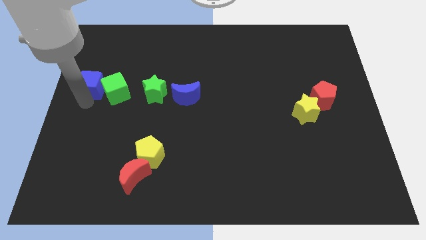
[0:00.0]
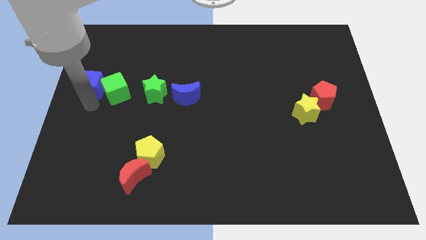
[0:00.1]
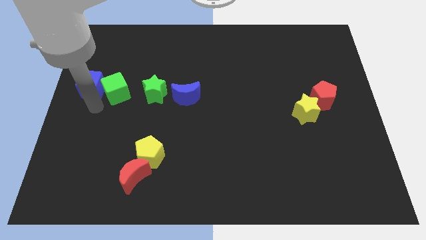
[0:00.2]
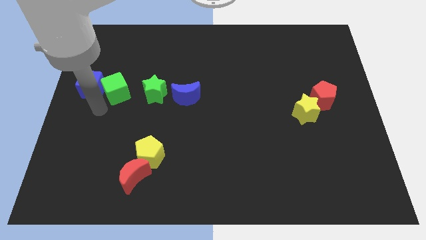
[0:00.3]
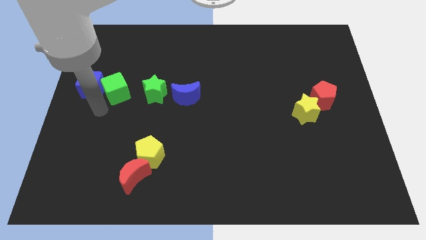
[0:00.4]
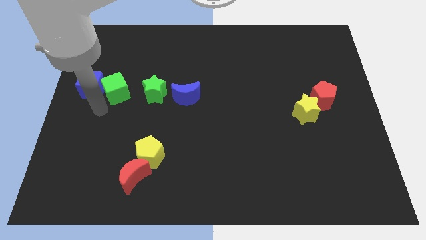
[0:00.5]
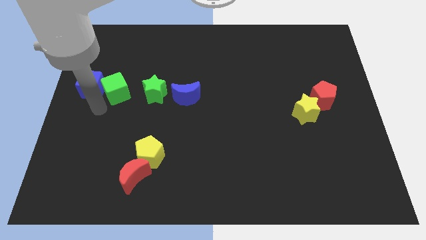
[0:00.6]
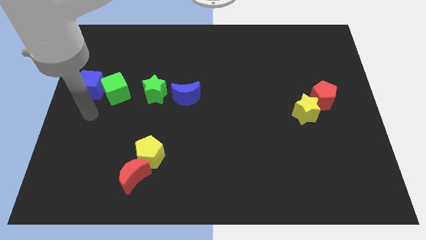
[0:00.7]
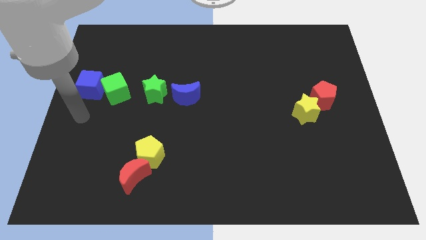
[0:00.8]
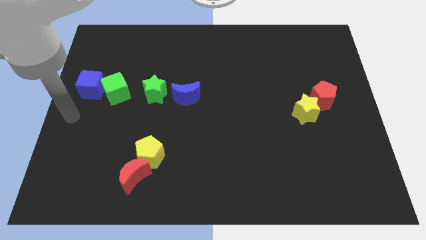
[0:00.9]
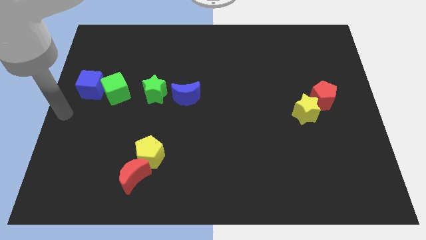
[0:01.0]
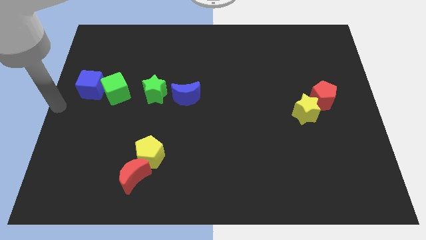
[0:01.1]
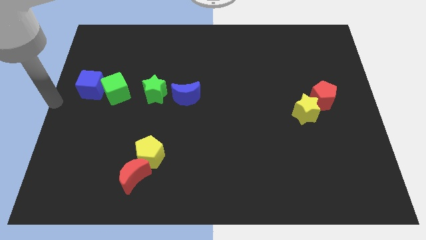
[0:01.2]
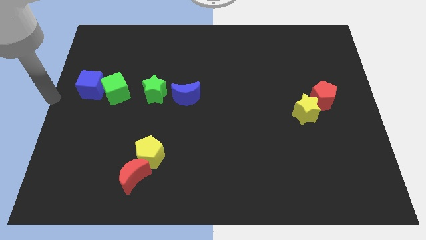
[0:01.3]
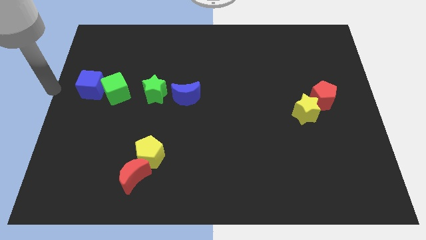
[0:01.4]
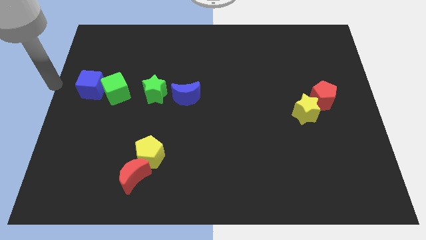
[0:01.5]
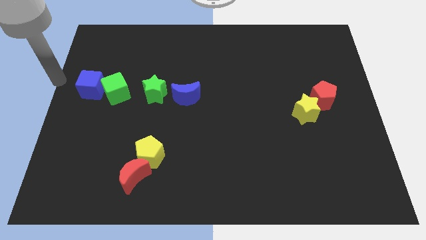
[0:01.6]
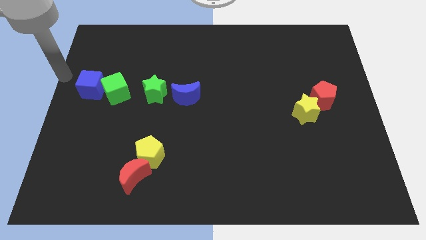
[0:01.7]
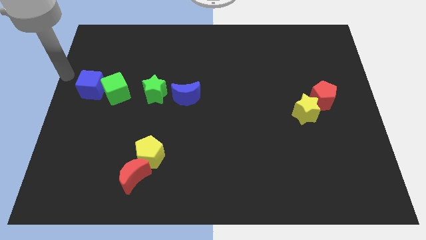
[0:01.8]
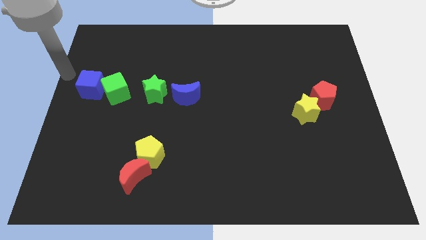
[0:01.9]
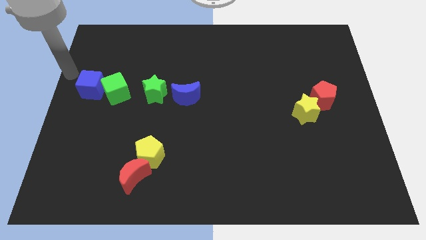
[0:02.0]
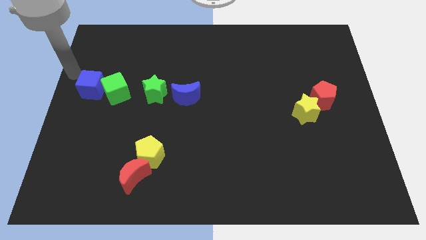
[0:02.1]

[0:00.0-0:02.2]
place the arm diagonal to the blue cube

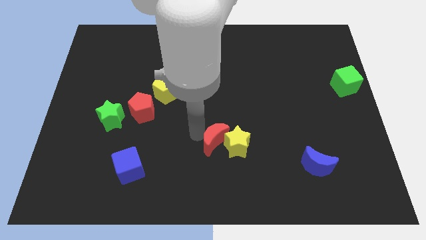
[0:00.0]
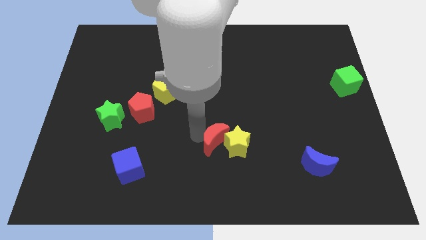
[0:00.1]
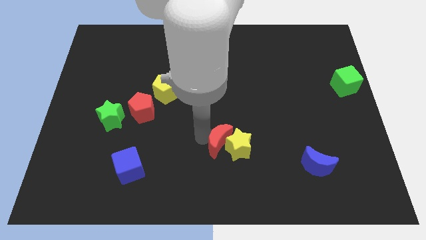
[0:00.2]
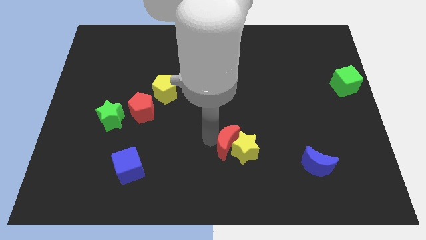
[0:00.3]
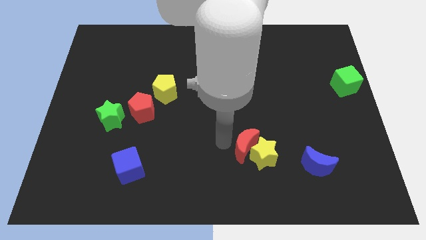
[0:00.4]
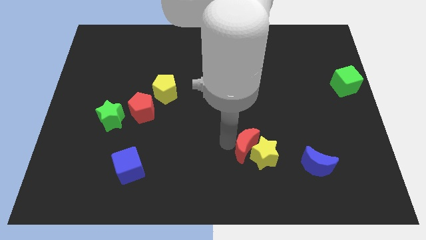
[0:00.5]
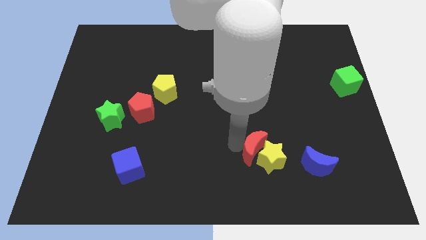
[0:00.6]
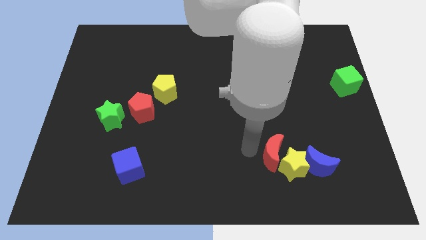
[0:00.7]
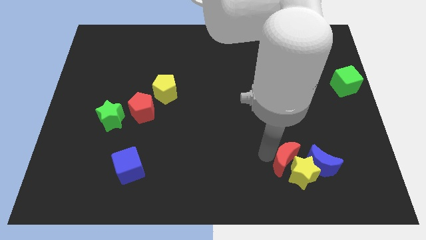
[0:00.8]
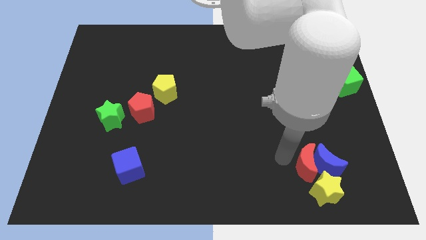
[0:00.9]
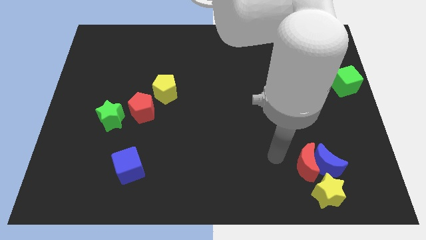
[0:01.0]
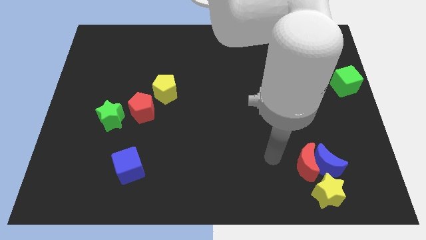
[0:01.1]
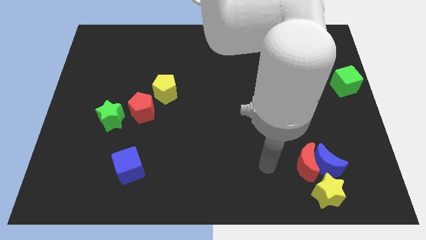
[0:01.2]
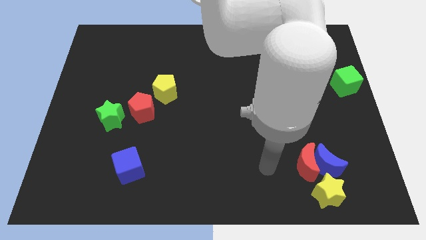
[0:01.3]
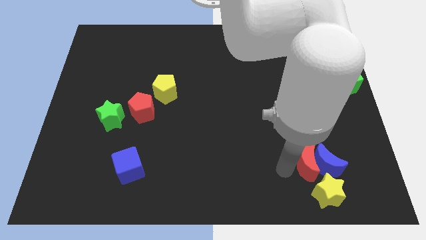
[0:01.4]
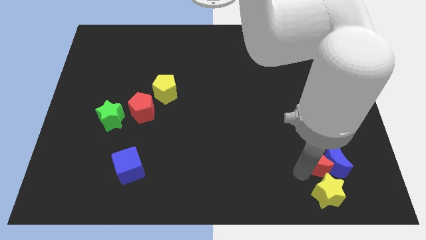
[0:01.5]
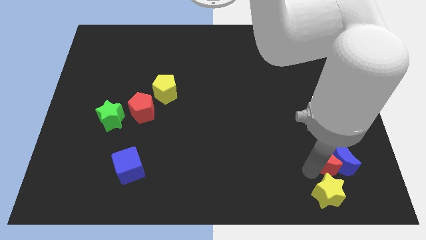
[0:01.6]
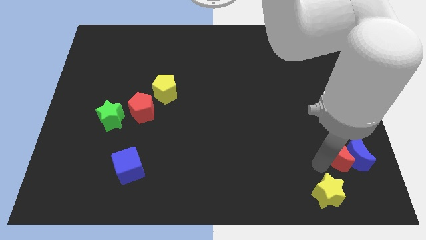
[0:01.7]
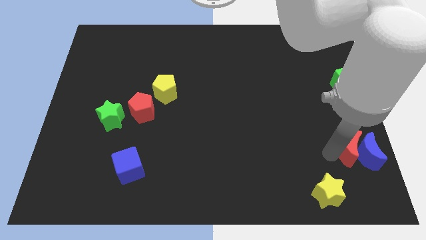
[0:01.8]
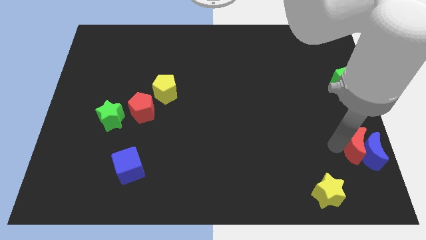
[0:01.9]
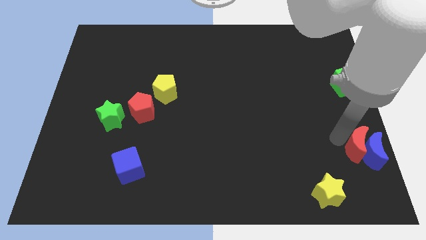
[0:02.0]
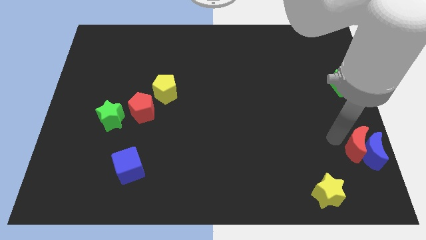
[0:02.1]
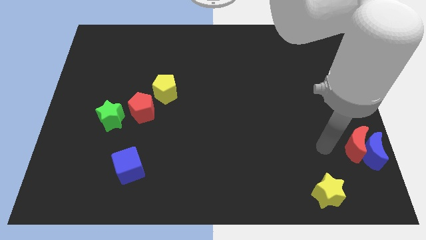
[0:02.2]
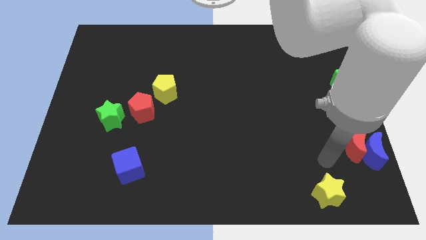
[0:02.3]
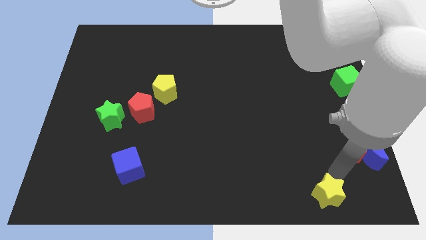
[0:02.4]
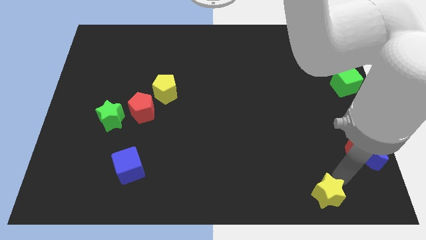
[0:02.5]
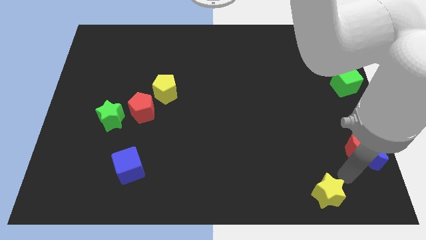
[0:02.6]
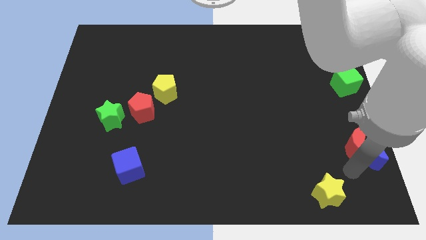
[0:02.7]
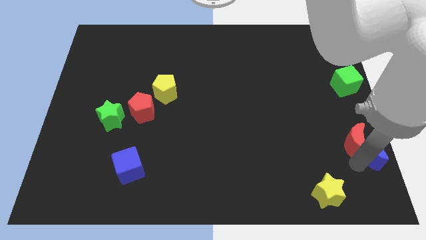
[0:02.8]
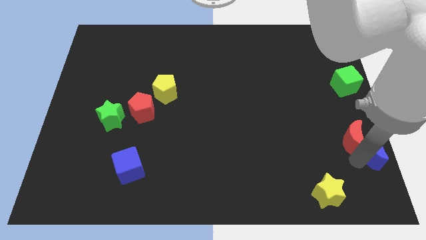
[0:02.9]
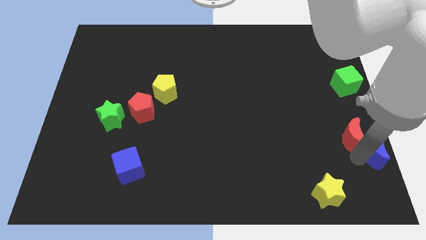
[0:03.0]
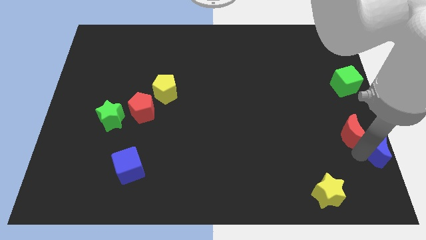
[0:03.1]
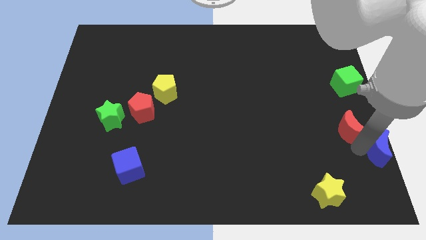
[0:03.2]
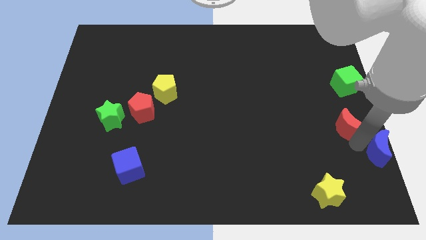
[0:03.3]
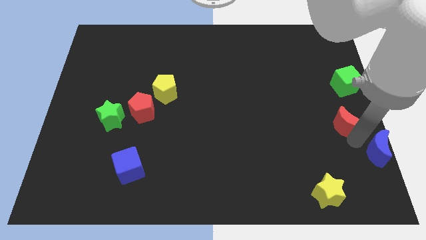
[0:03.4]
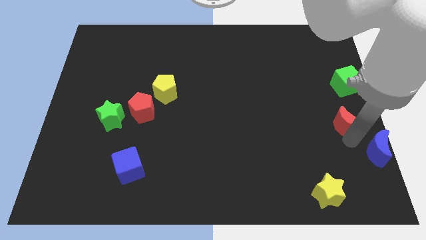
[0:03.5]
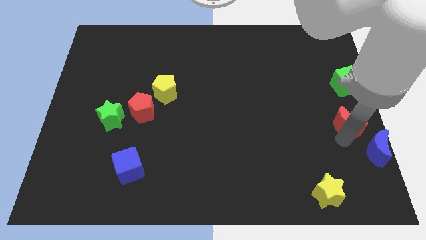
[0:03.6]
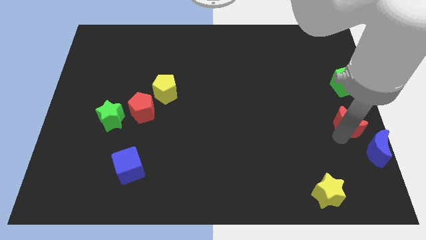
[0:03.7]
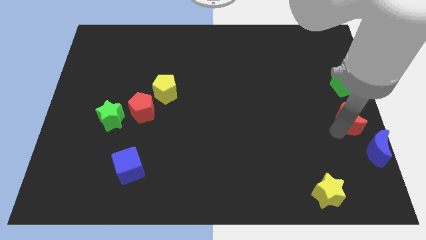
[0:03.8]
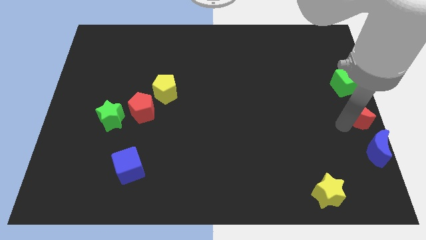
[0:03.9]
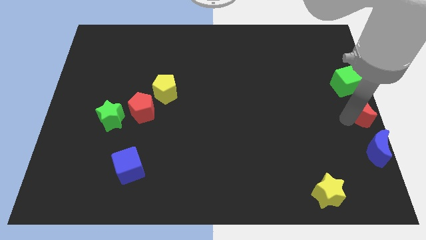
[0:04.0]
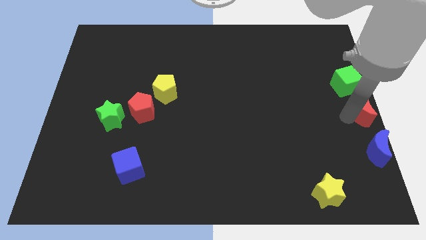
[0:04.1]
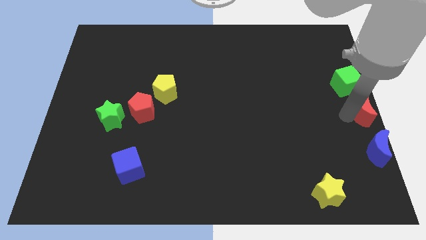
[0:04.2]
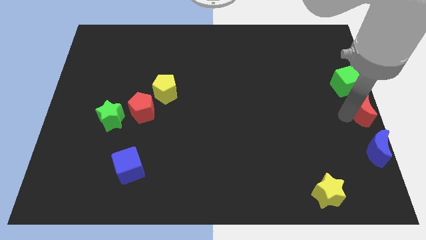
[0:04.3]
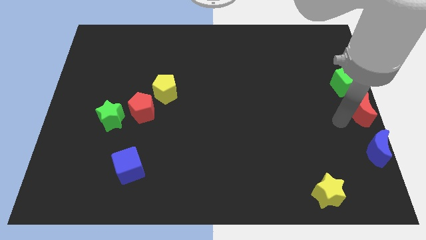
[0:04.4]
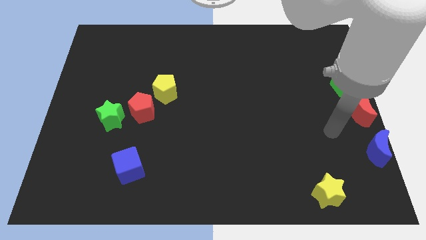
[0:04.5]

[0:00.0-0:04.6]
move the red moon to the center right

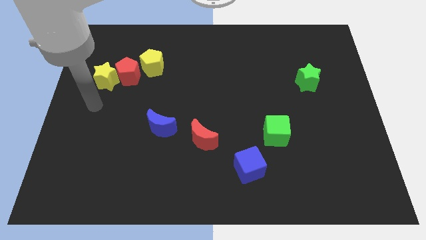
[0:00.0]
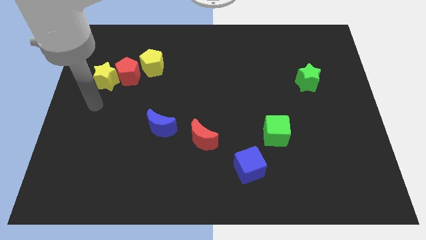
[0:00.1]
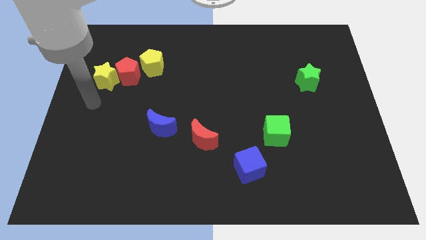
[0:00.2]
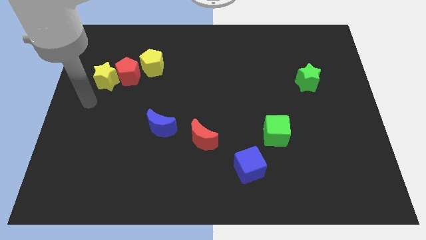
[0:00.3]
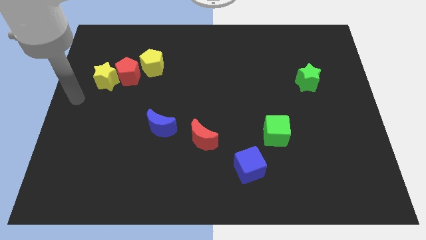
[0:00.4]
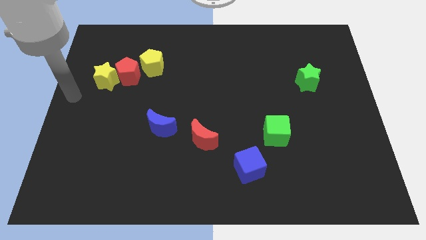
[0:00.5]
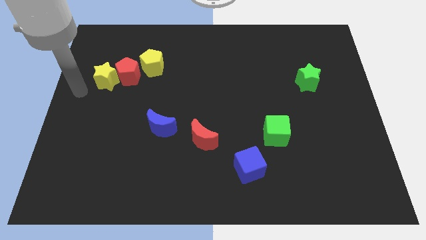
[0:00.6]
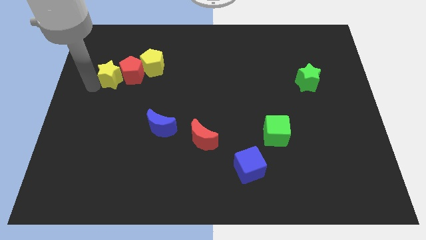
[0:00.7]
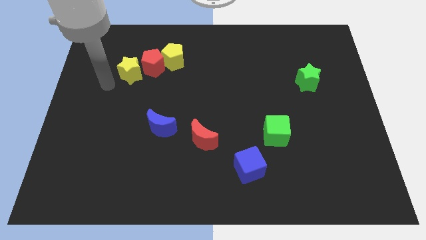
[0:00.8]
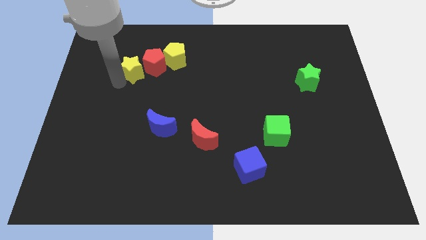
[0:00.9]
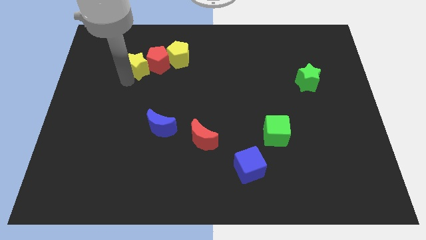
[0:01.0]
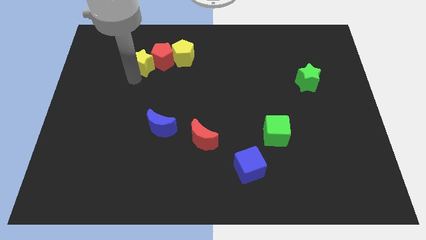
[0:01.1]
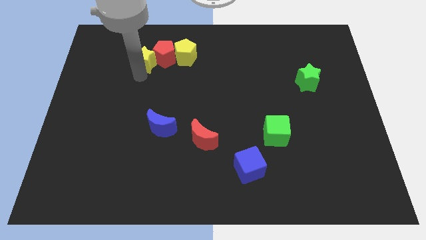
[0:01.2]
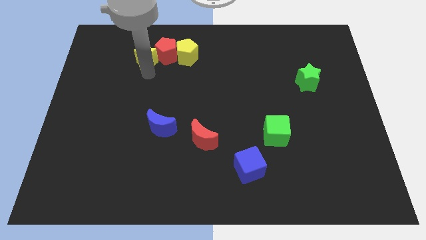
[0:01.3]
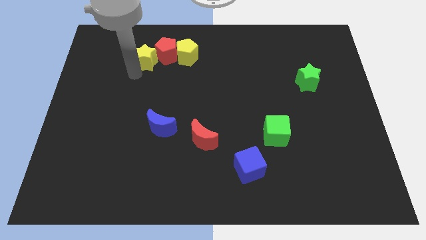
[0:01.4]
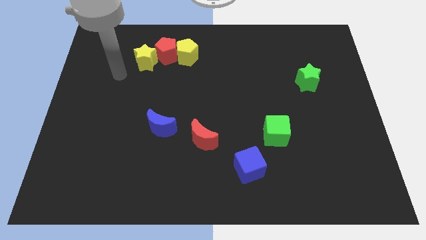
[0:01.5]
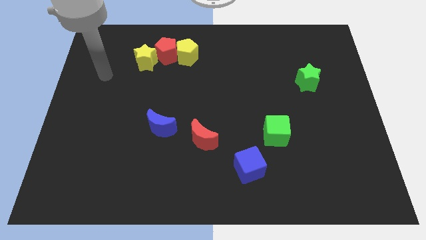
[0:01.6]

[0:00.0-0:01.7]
push red pentagon with the yellow star

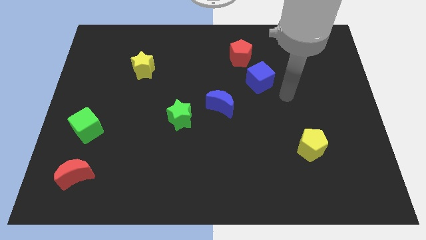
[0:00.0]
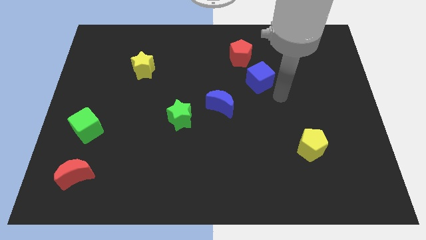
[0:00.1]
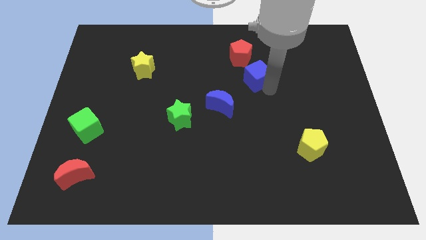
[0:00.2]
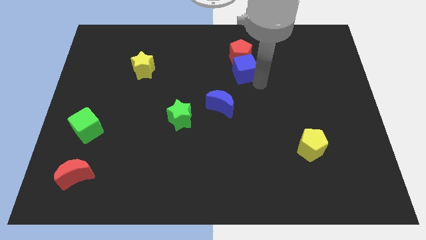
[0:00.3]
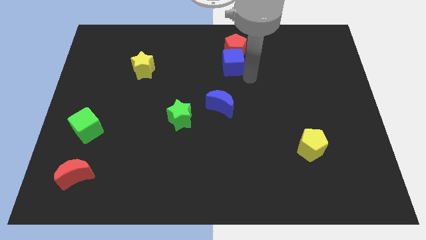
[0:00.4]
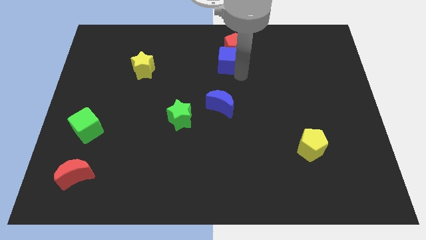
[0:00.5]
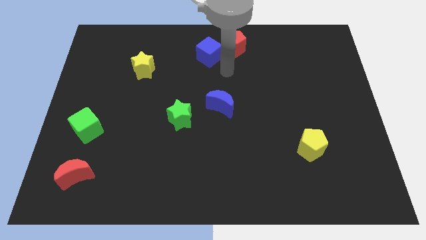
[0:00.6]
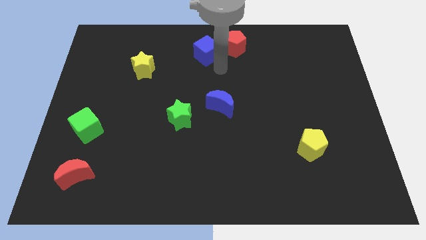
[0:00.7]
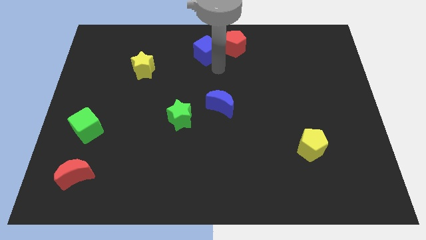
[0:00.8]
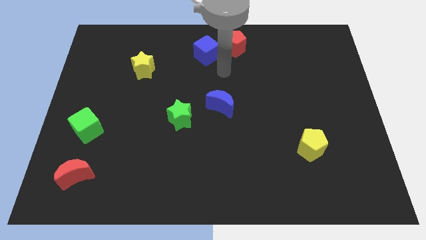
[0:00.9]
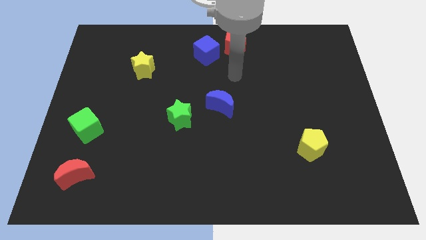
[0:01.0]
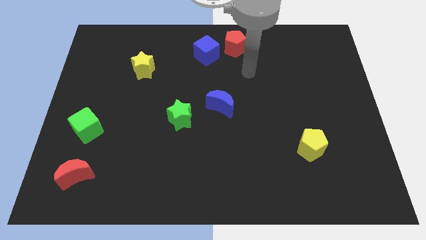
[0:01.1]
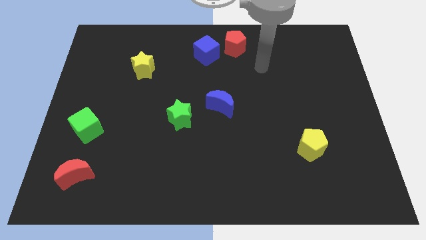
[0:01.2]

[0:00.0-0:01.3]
push the blue cube to the left of the red pentagon
